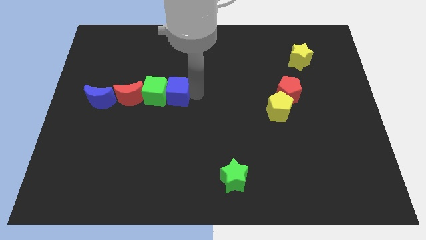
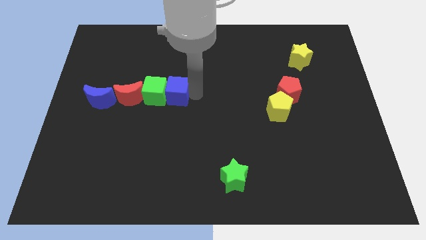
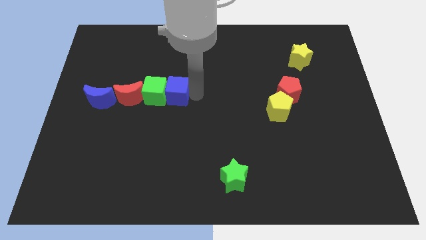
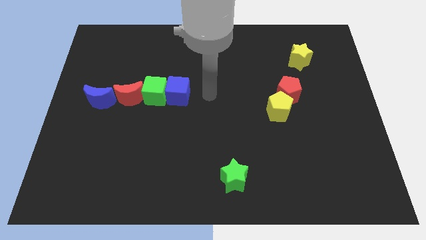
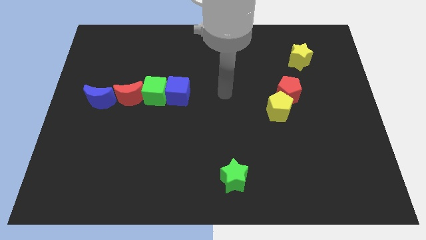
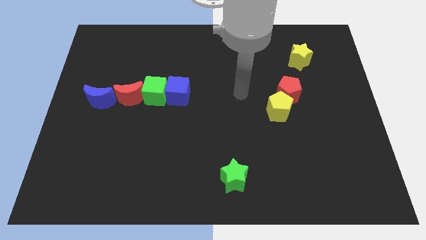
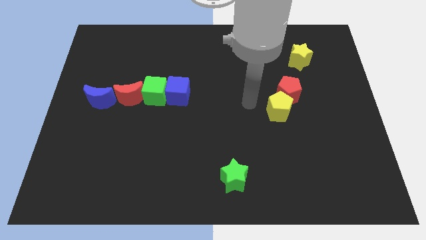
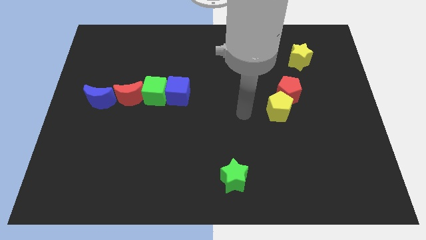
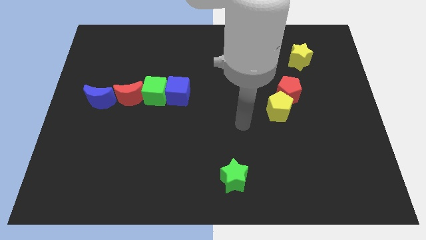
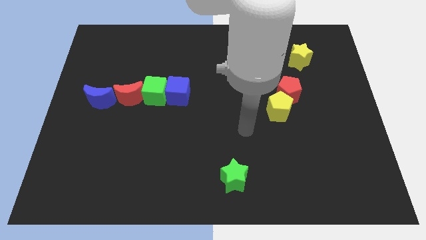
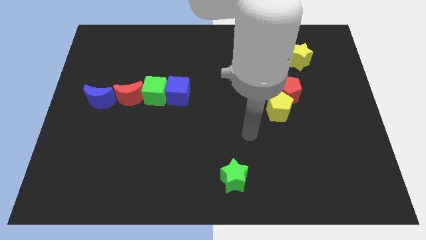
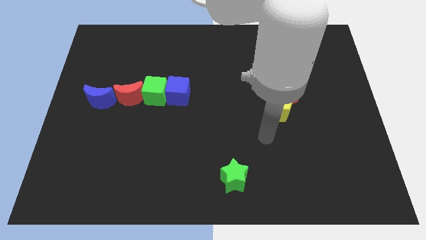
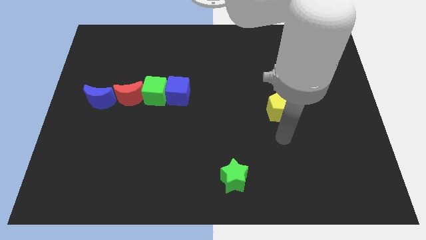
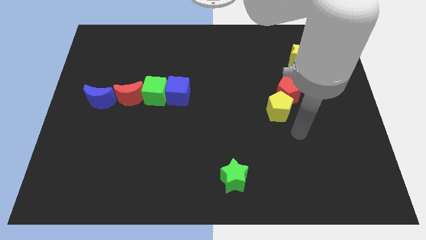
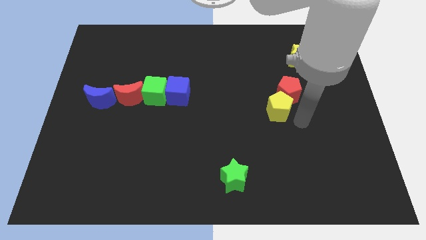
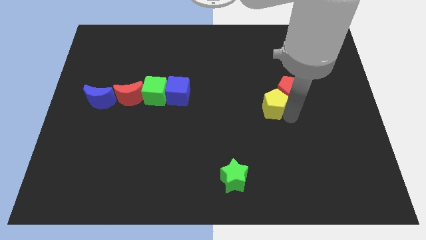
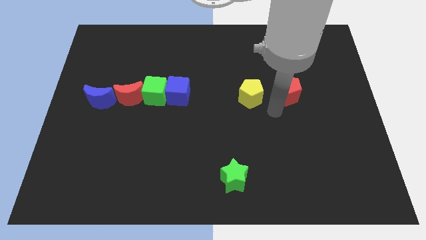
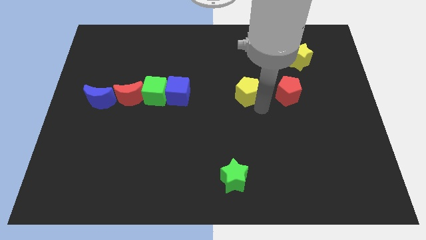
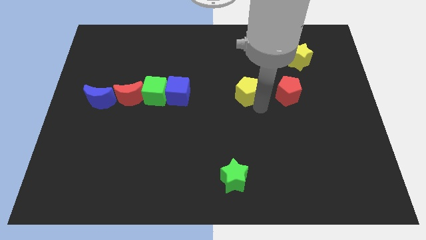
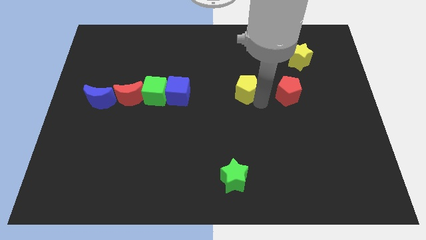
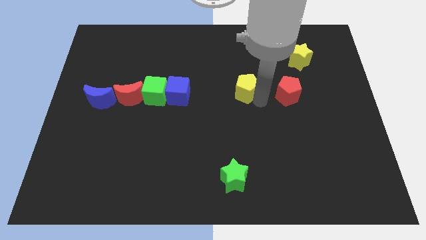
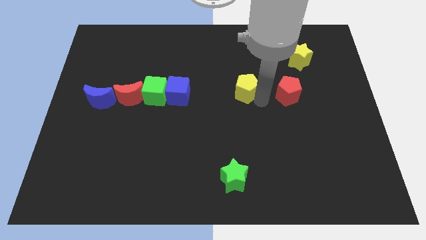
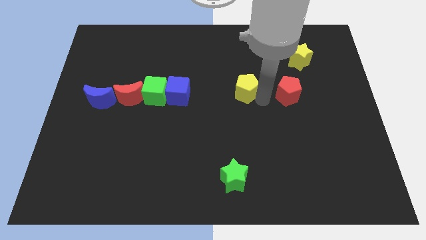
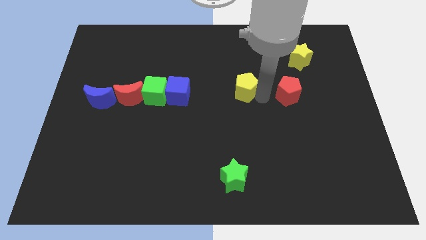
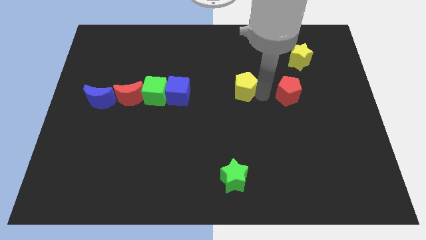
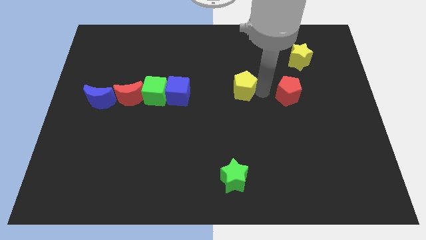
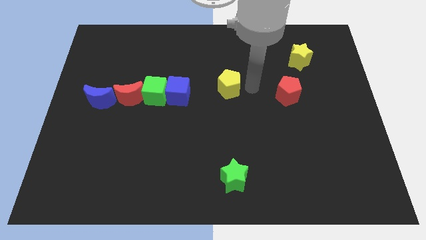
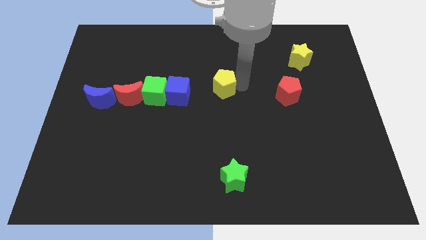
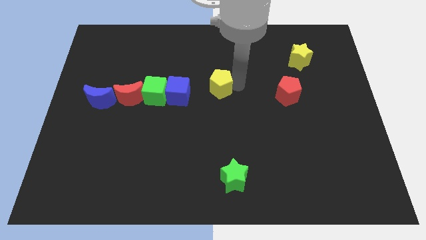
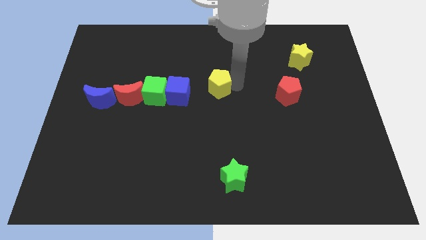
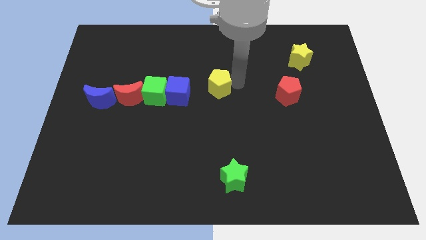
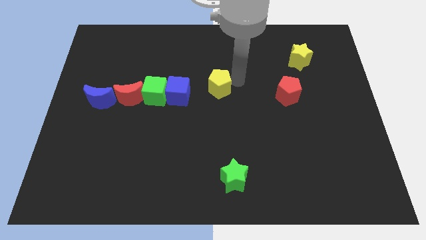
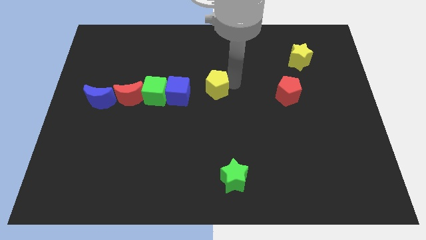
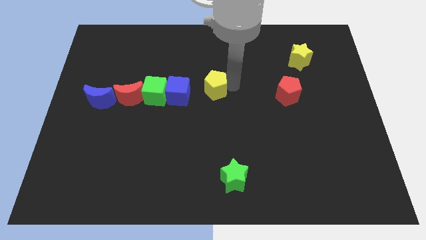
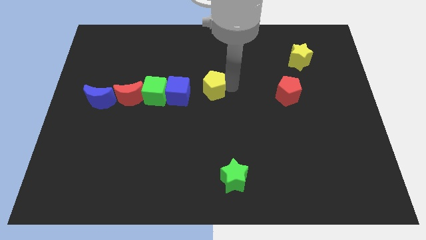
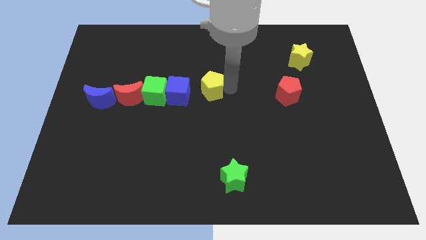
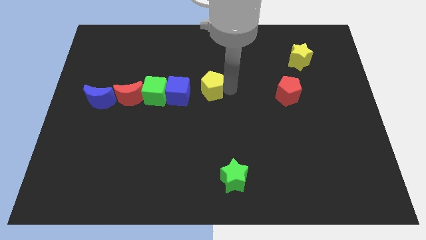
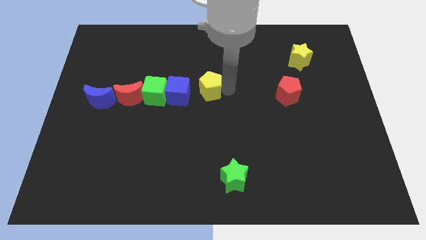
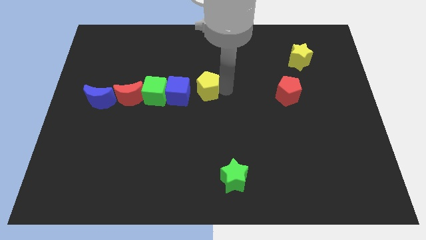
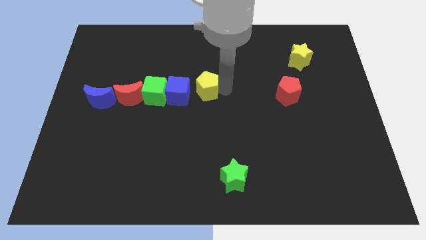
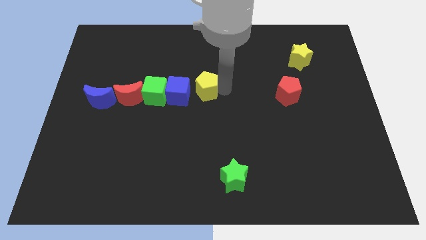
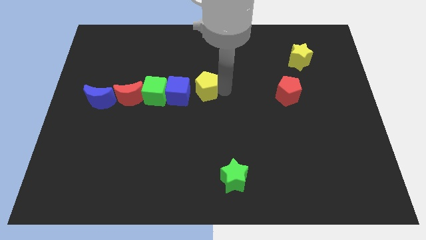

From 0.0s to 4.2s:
separate the yellow pentagon from the red pentagon

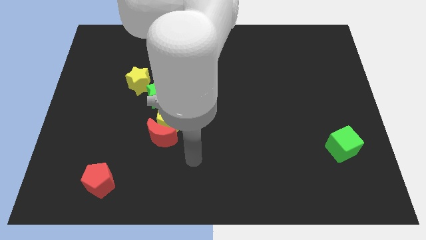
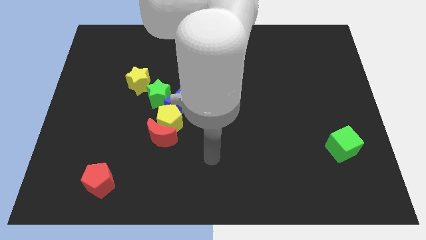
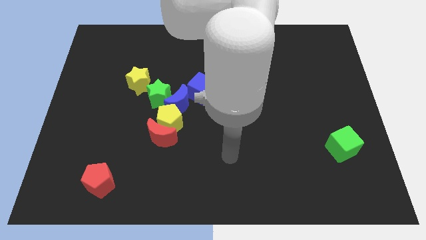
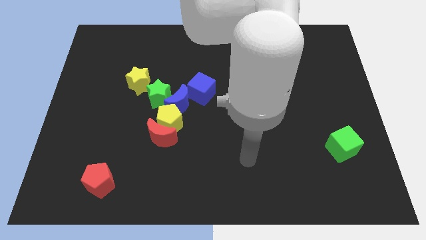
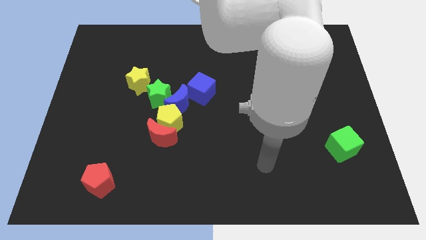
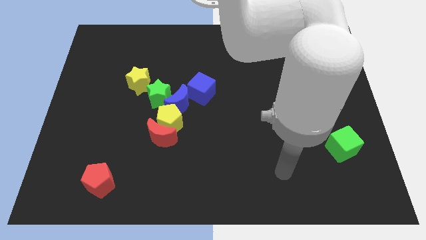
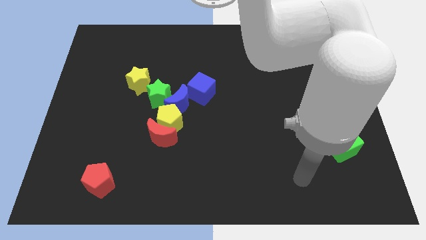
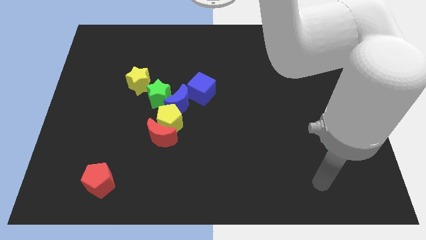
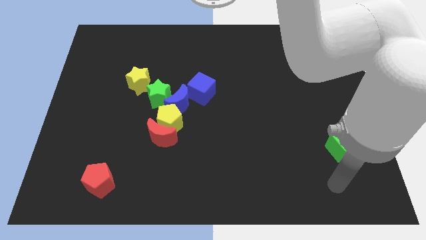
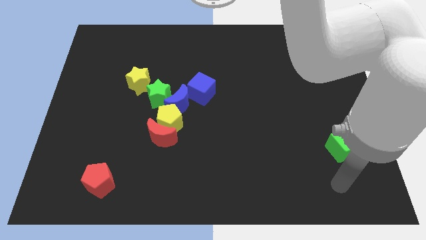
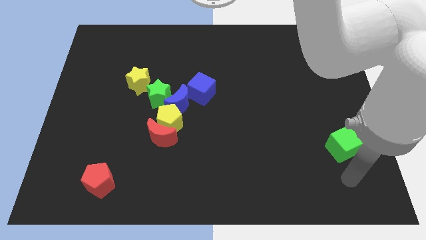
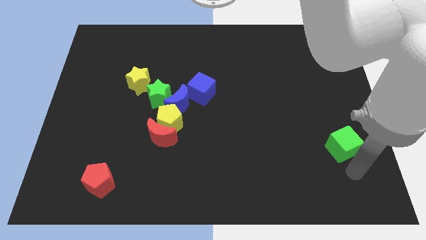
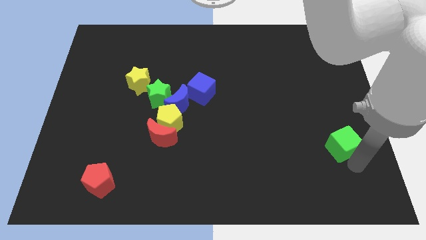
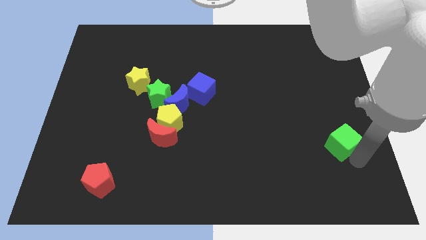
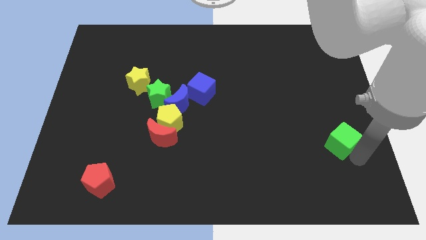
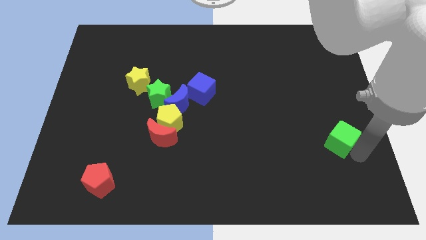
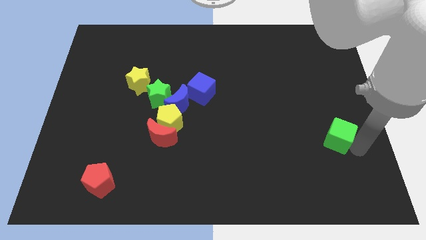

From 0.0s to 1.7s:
place your arm close to green cube

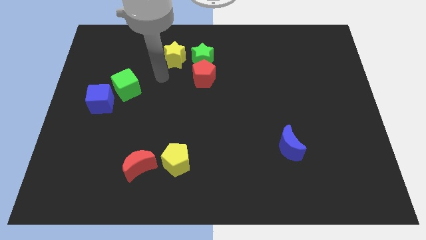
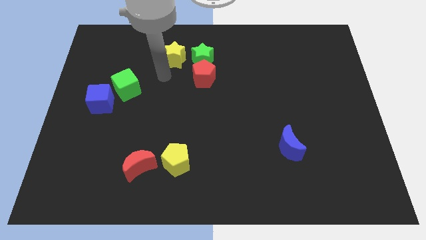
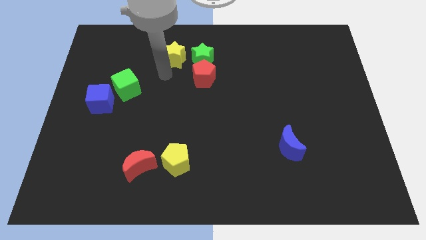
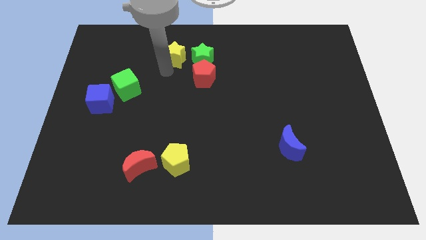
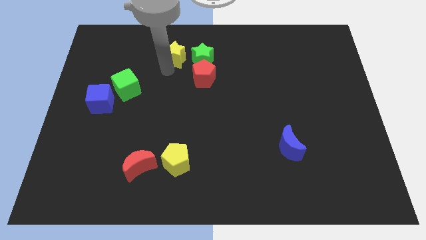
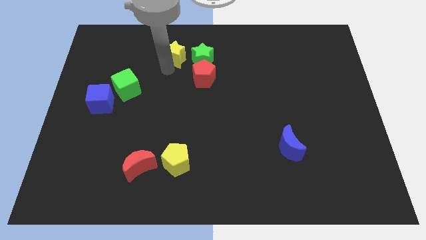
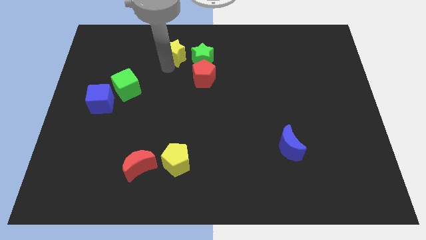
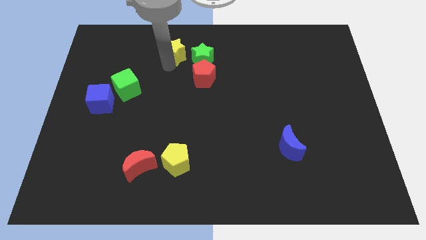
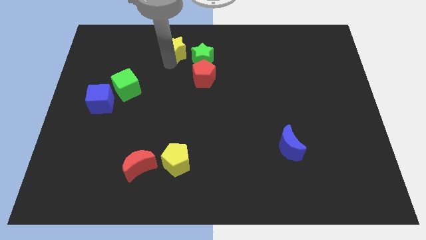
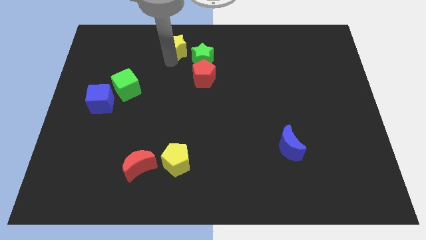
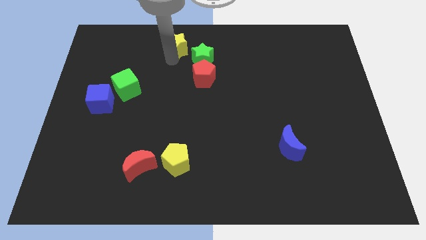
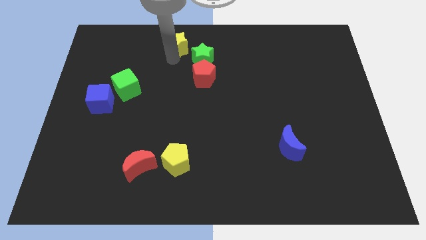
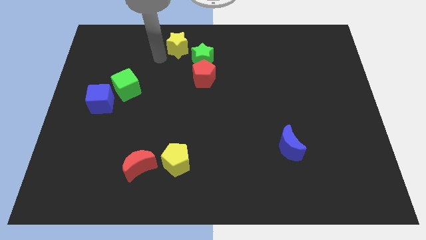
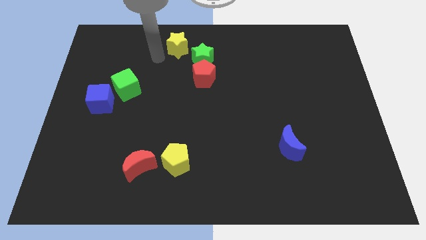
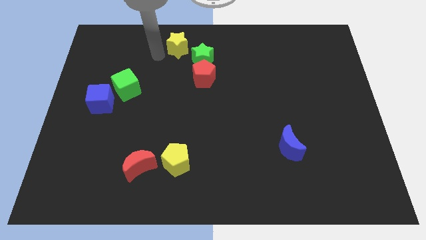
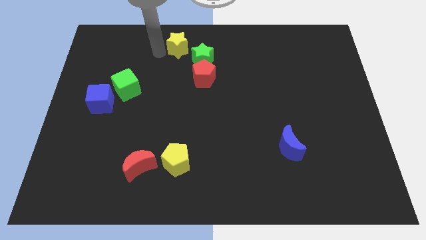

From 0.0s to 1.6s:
push the yellow star towards the center top of the board

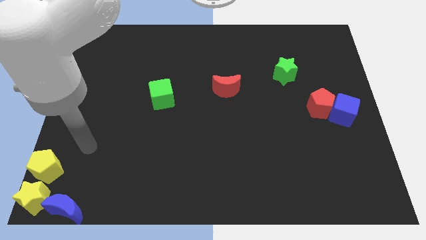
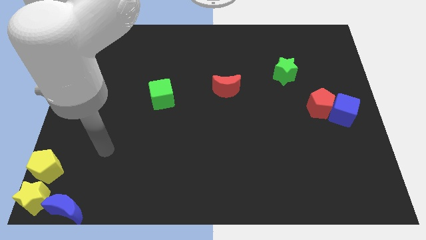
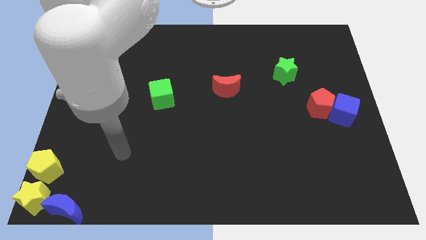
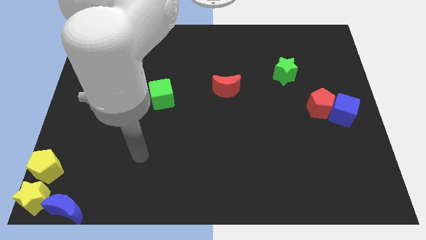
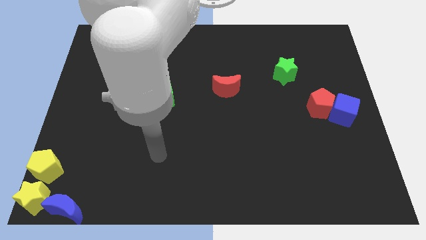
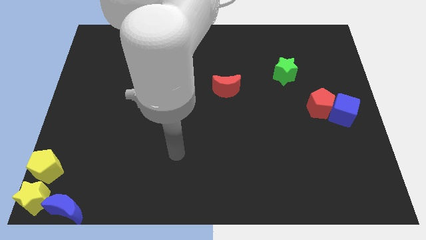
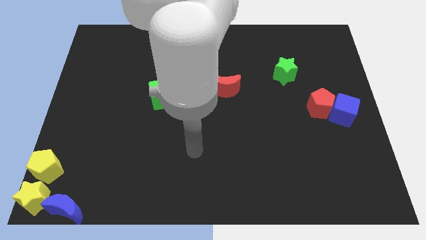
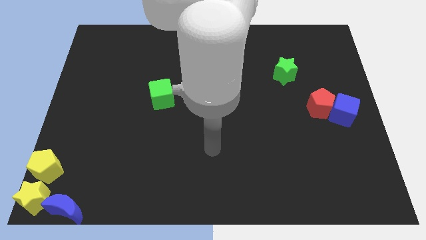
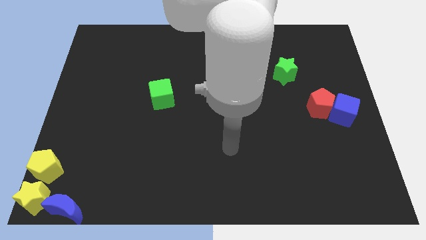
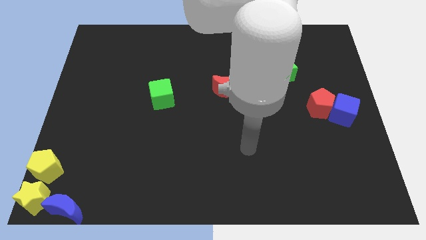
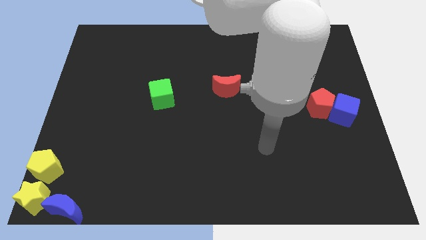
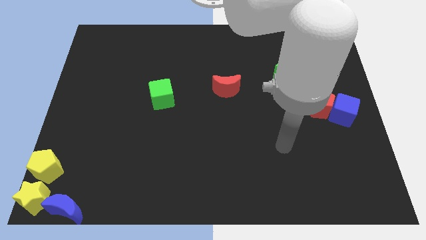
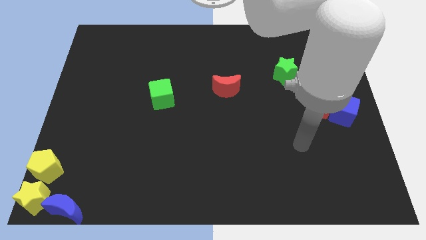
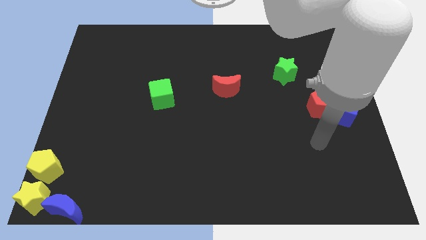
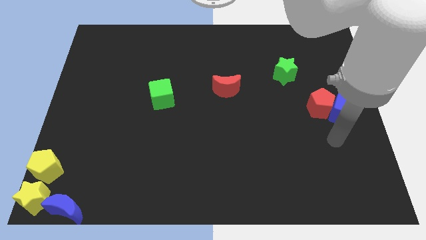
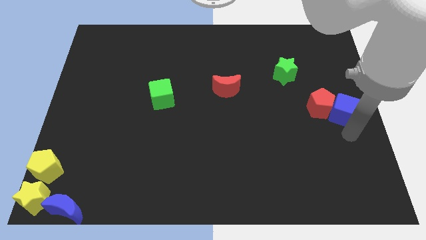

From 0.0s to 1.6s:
move the arm towards the blue cube
